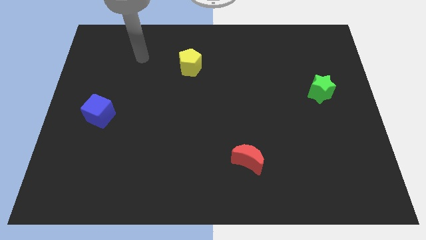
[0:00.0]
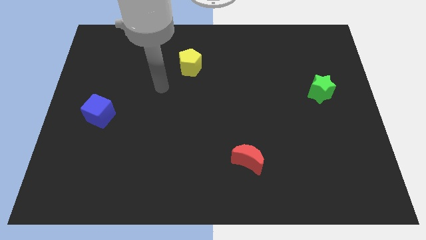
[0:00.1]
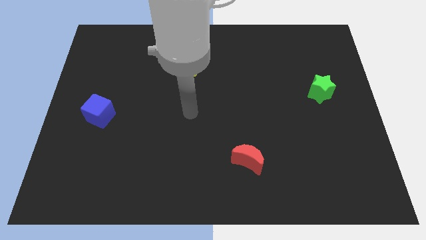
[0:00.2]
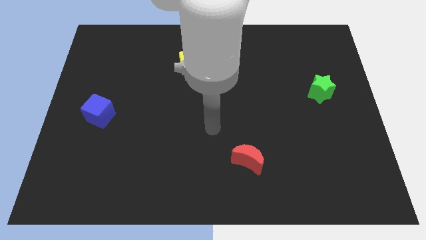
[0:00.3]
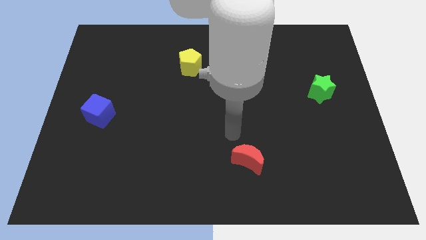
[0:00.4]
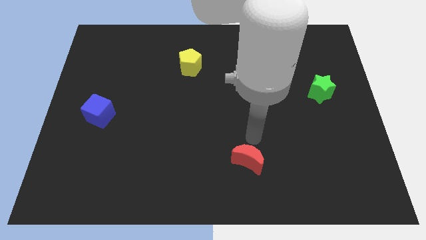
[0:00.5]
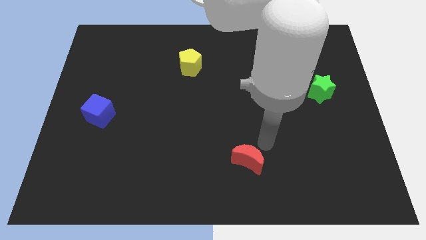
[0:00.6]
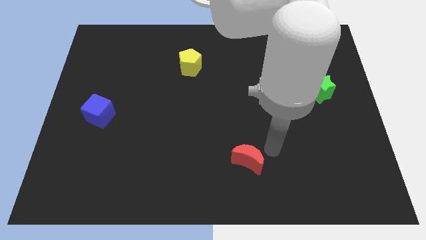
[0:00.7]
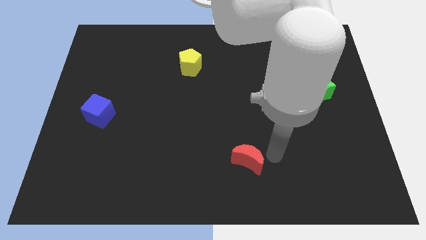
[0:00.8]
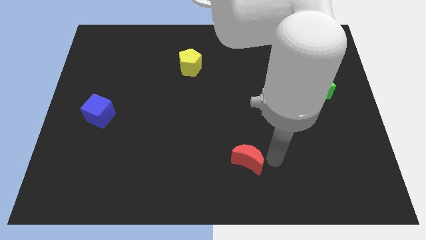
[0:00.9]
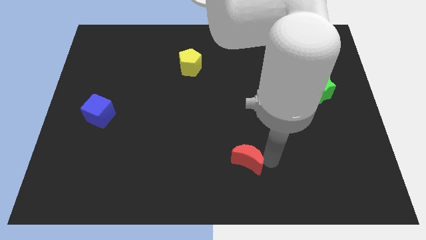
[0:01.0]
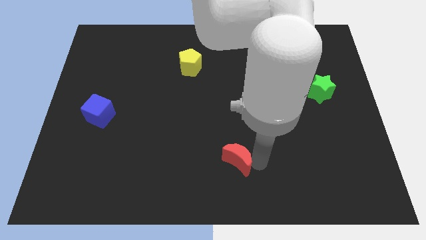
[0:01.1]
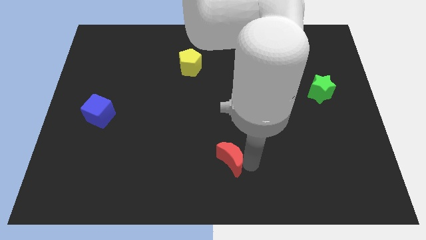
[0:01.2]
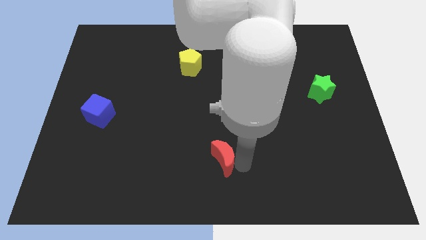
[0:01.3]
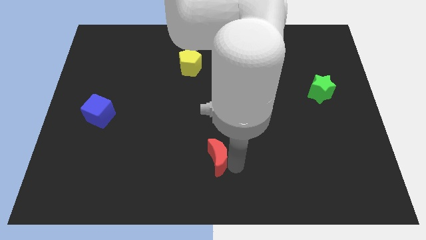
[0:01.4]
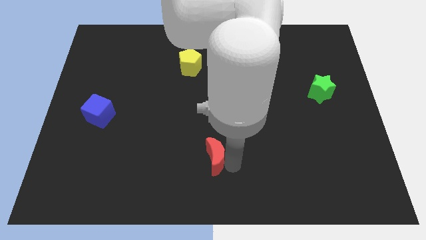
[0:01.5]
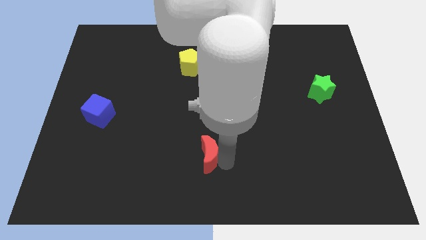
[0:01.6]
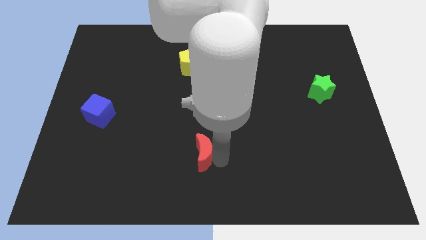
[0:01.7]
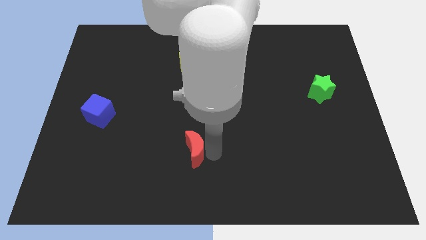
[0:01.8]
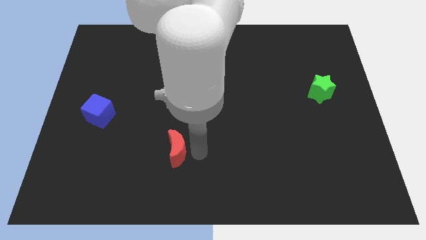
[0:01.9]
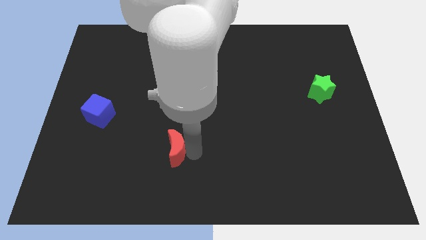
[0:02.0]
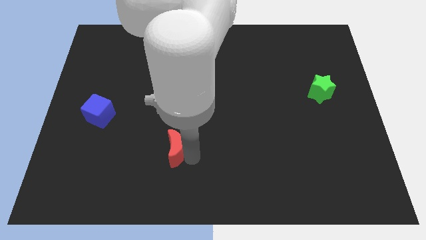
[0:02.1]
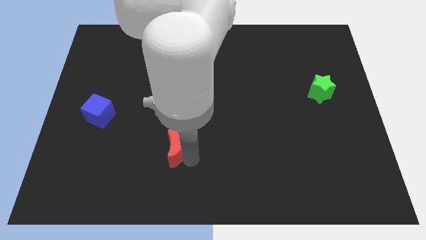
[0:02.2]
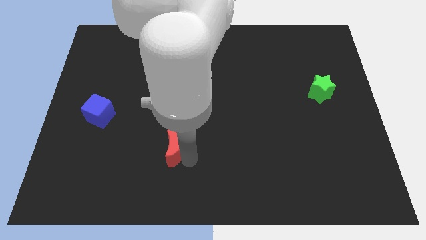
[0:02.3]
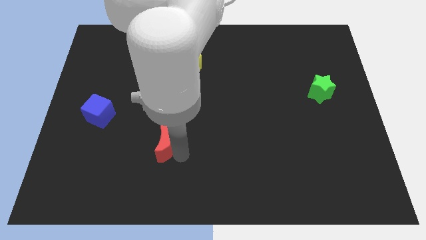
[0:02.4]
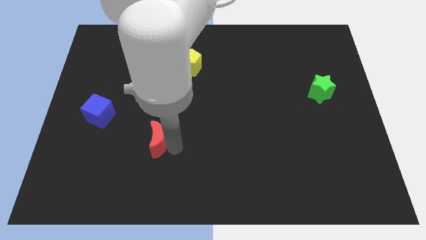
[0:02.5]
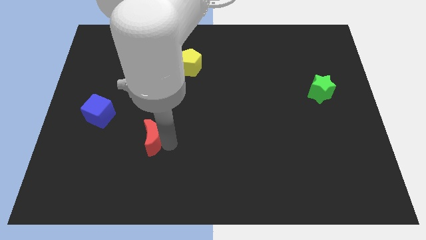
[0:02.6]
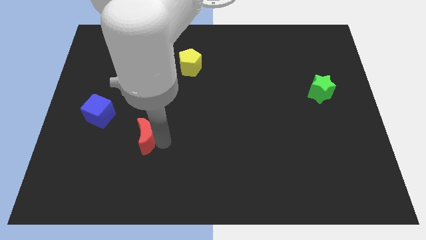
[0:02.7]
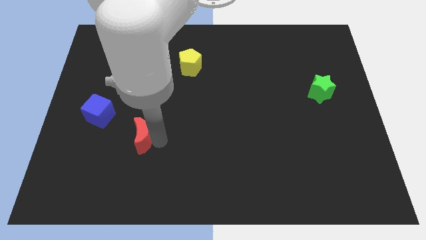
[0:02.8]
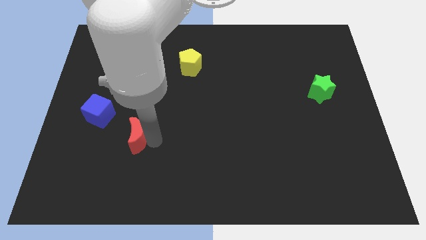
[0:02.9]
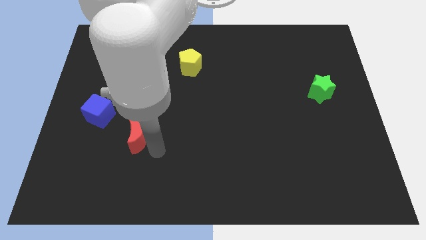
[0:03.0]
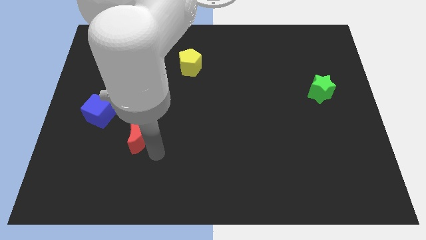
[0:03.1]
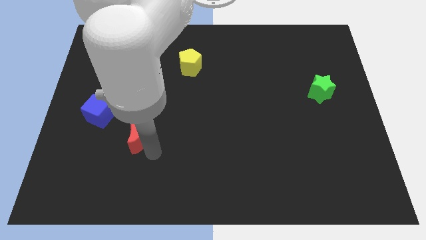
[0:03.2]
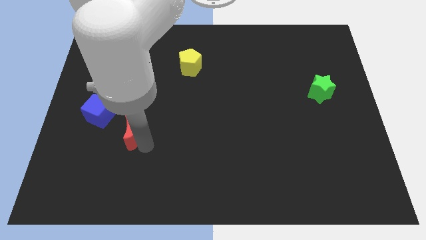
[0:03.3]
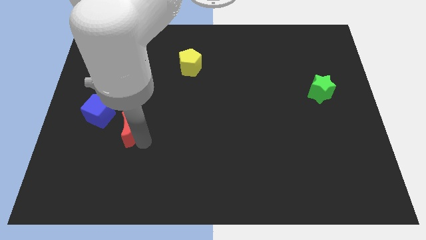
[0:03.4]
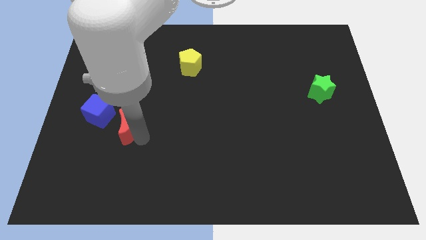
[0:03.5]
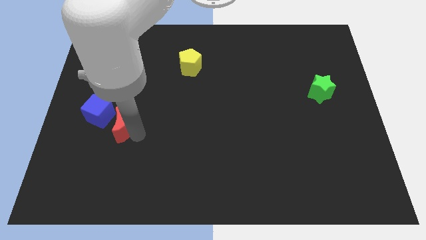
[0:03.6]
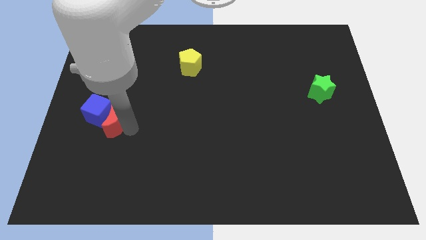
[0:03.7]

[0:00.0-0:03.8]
put the red block to the cube

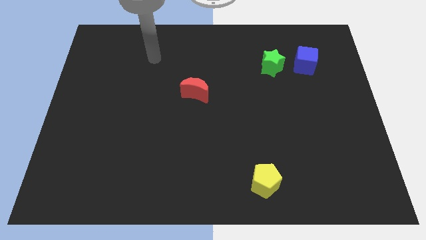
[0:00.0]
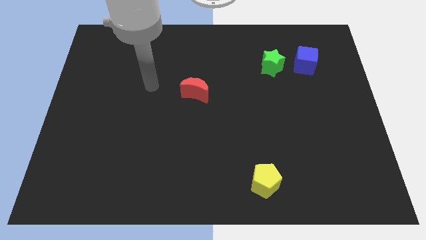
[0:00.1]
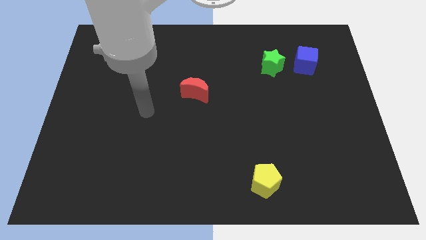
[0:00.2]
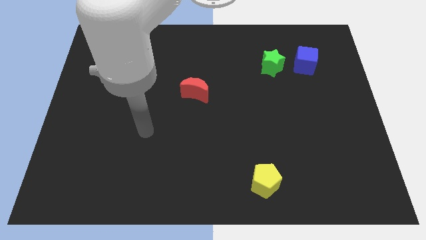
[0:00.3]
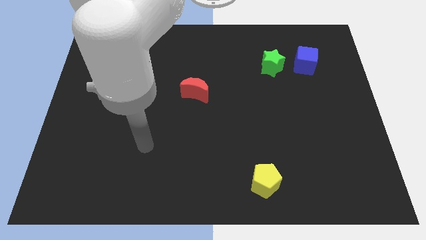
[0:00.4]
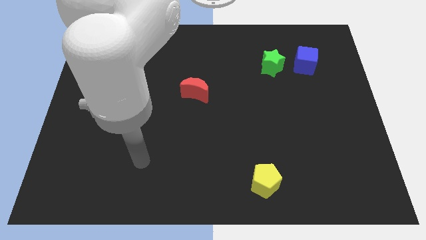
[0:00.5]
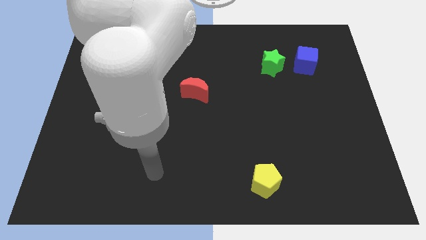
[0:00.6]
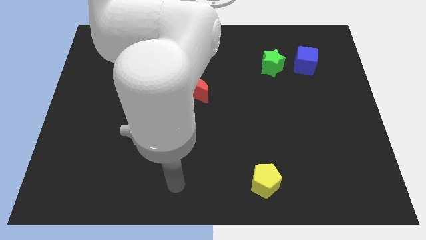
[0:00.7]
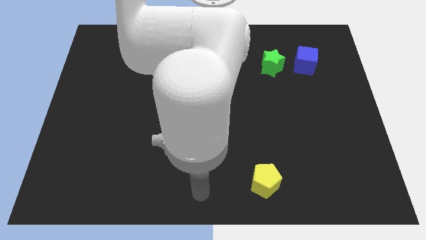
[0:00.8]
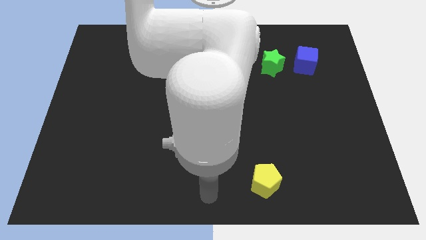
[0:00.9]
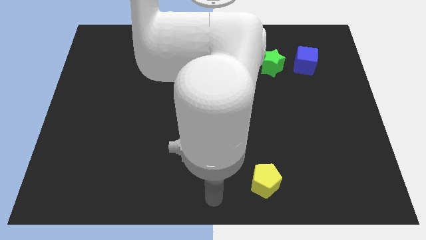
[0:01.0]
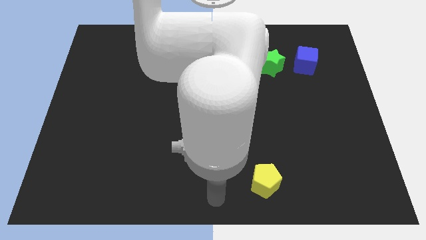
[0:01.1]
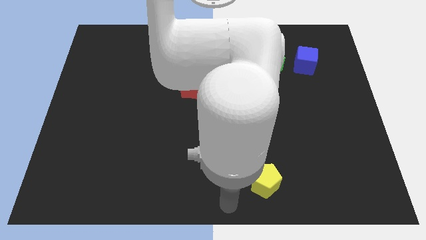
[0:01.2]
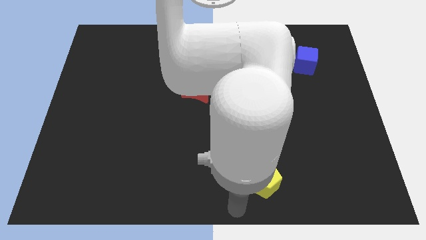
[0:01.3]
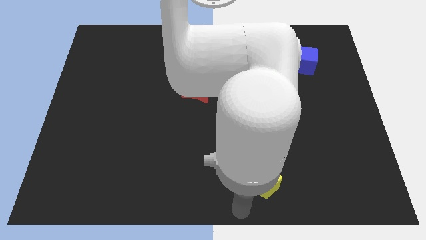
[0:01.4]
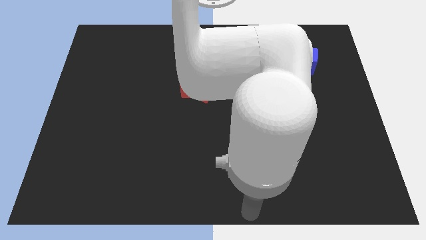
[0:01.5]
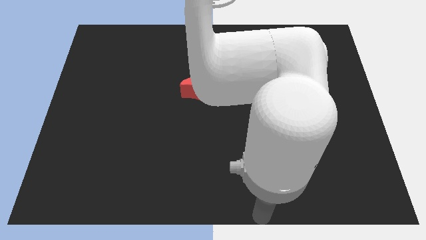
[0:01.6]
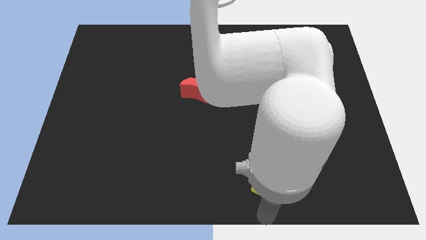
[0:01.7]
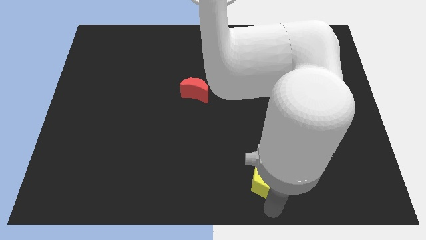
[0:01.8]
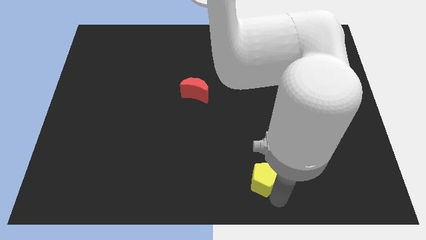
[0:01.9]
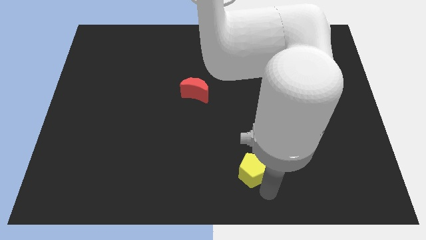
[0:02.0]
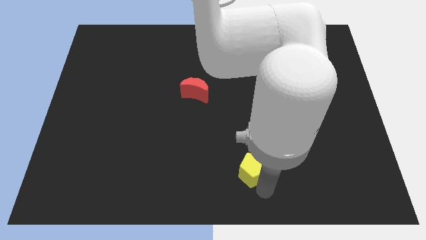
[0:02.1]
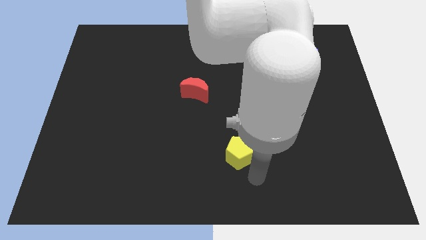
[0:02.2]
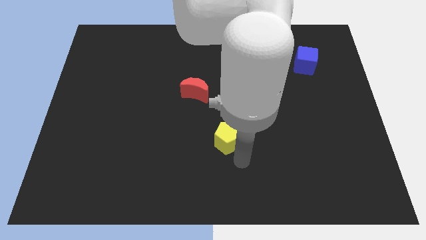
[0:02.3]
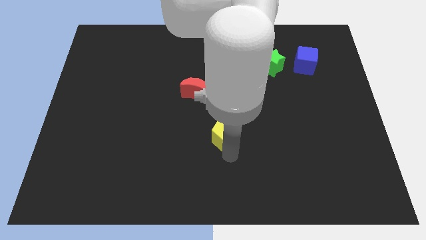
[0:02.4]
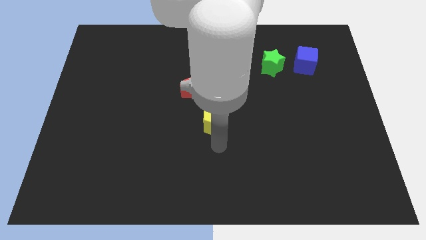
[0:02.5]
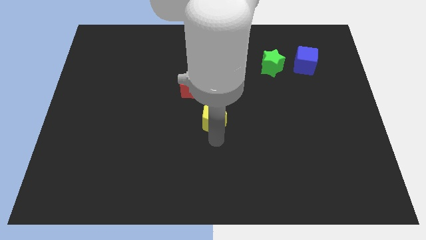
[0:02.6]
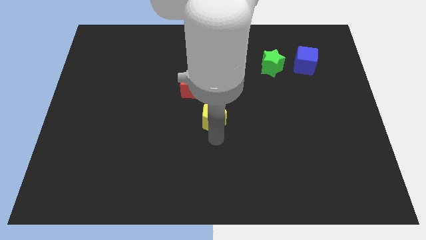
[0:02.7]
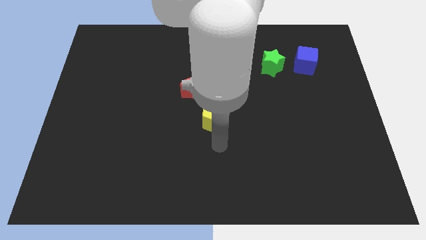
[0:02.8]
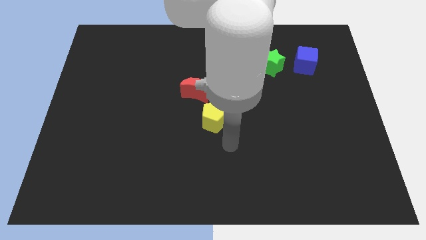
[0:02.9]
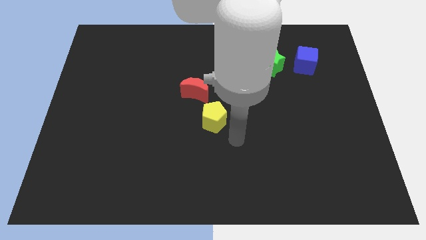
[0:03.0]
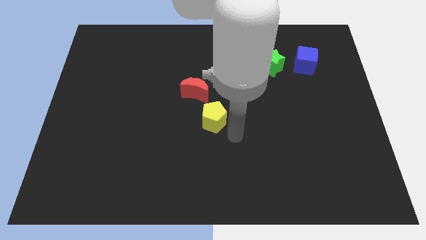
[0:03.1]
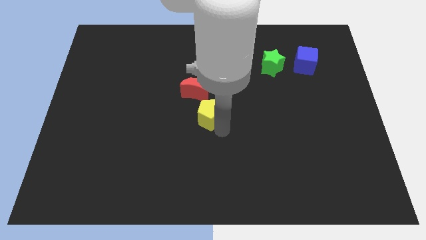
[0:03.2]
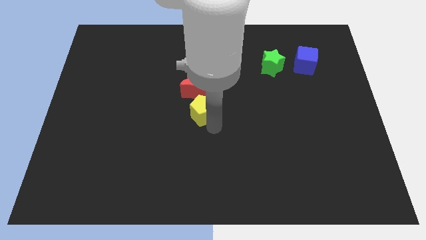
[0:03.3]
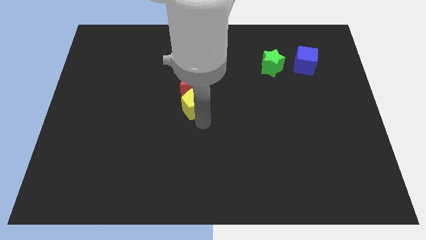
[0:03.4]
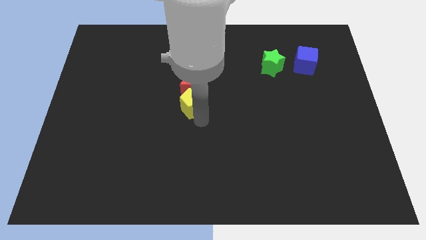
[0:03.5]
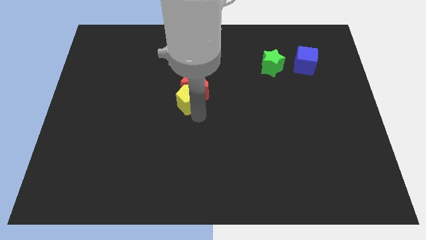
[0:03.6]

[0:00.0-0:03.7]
push the yellow pentagon close to the red block

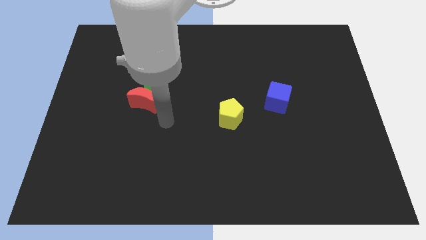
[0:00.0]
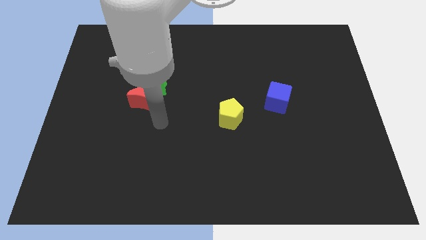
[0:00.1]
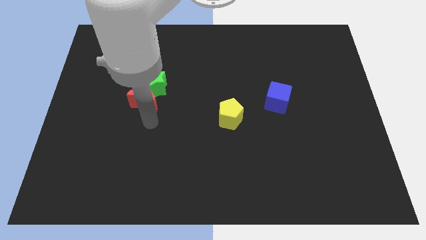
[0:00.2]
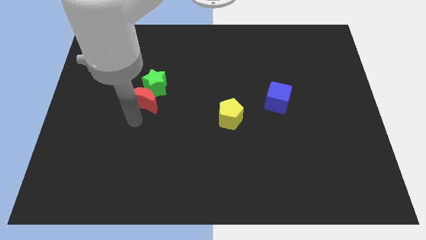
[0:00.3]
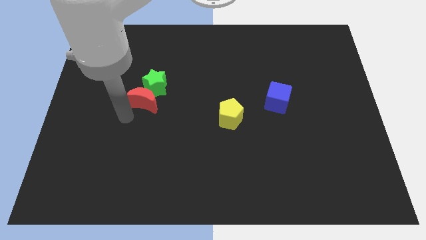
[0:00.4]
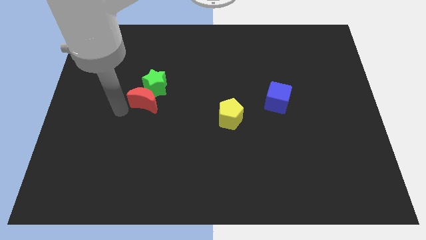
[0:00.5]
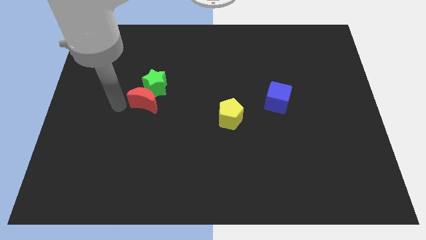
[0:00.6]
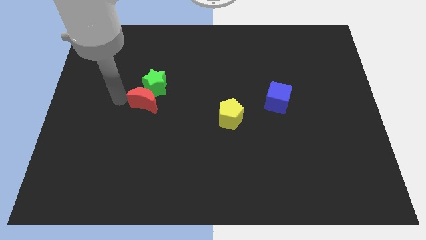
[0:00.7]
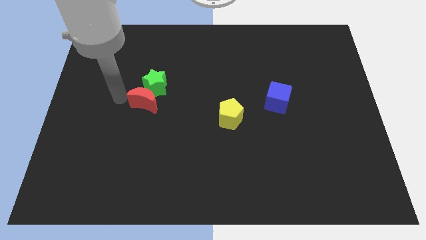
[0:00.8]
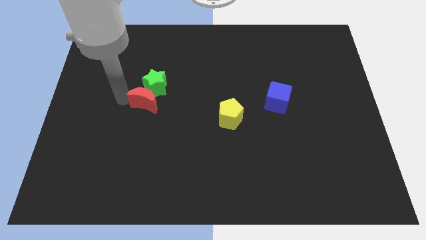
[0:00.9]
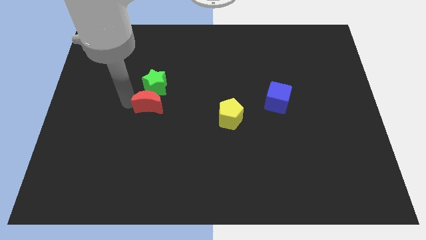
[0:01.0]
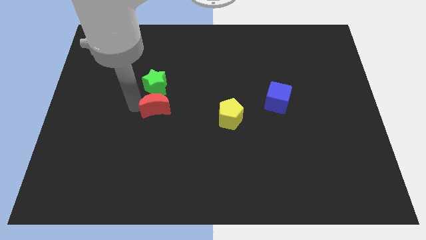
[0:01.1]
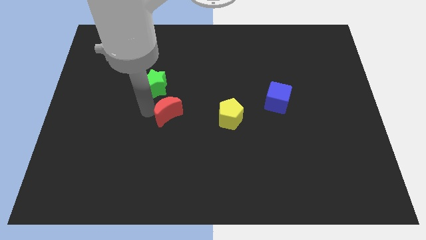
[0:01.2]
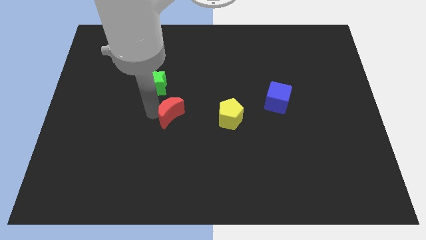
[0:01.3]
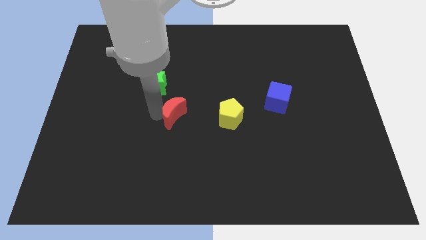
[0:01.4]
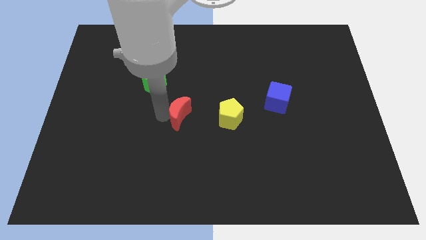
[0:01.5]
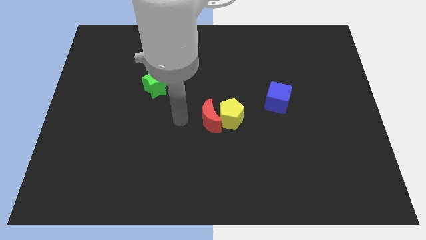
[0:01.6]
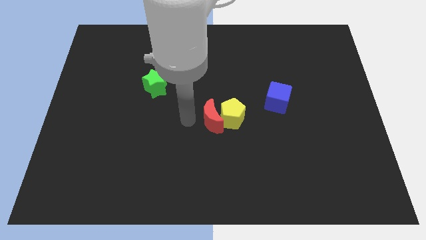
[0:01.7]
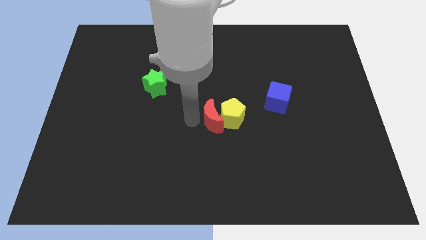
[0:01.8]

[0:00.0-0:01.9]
push the moon towards the yellow pentagon
